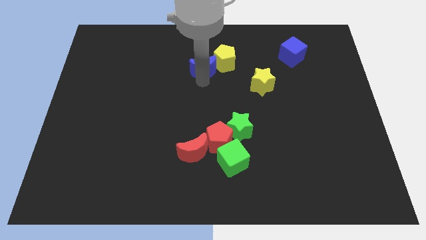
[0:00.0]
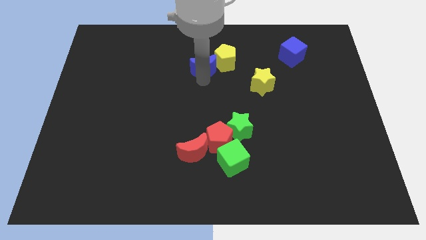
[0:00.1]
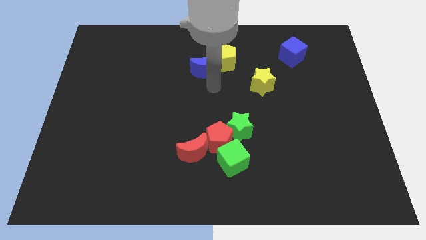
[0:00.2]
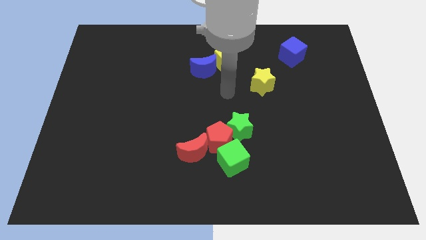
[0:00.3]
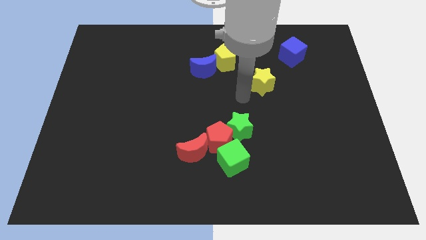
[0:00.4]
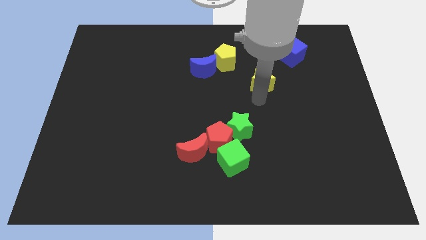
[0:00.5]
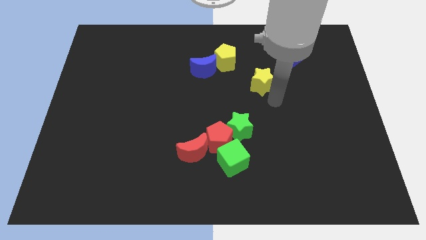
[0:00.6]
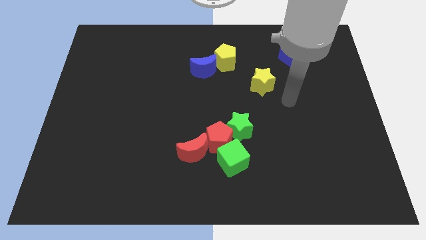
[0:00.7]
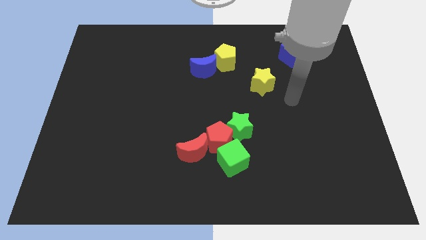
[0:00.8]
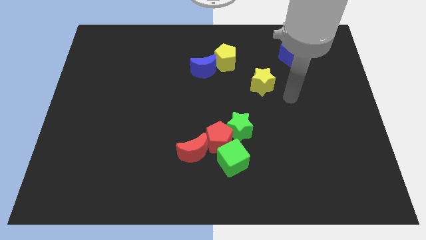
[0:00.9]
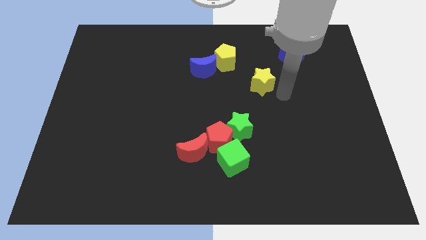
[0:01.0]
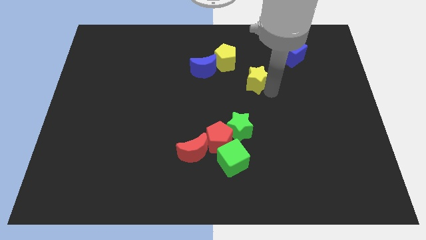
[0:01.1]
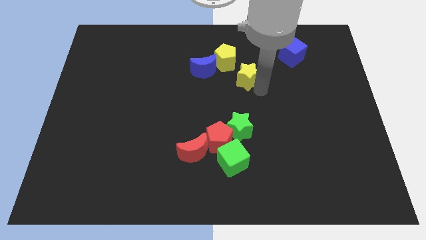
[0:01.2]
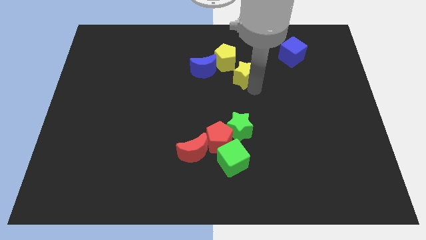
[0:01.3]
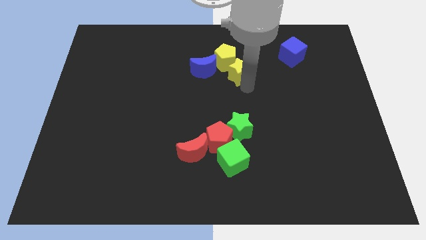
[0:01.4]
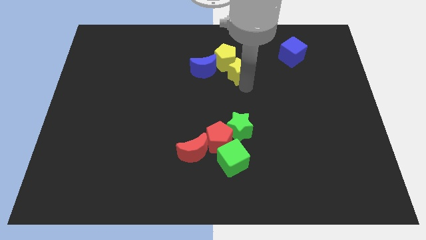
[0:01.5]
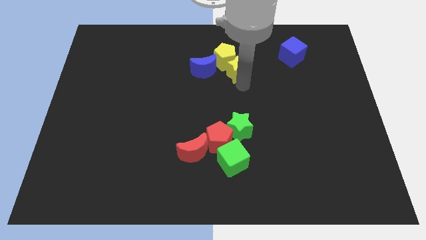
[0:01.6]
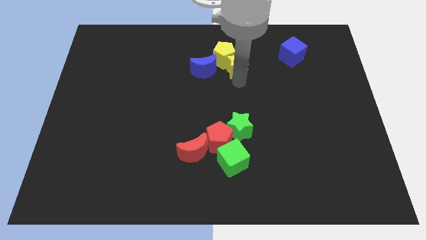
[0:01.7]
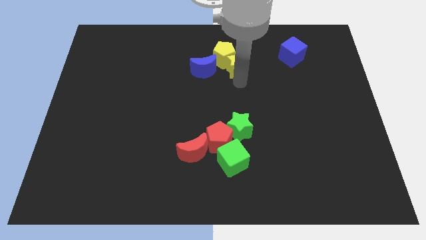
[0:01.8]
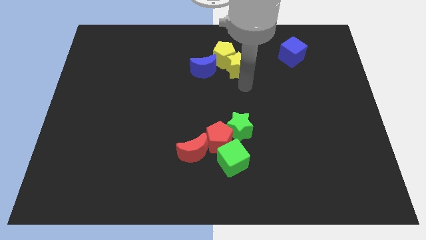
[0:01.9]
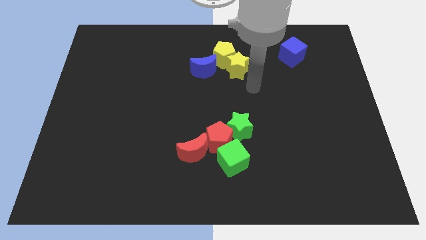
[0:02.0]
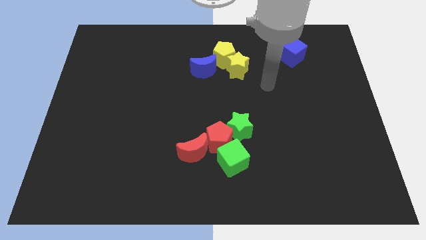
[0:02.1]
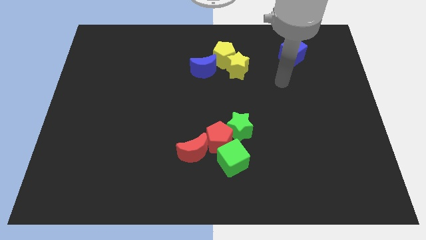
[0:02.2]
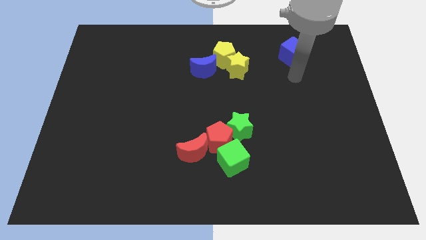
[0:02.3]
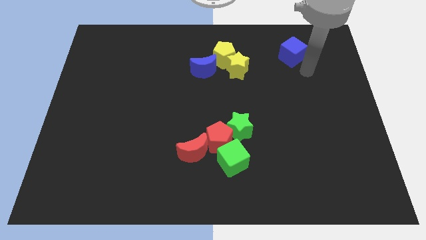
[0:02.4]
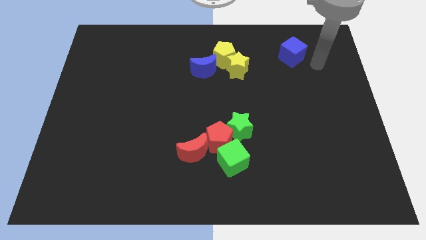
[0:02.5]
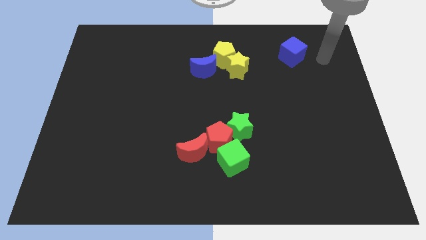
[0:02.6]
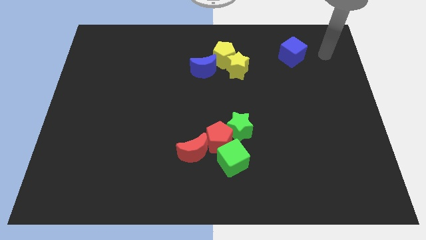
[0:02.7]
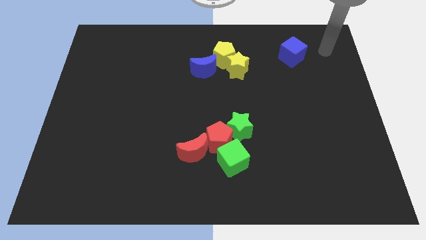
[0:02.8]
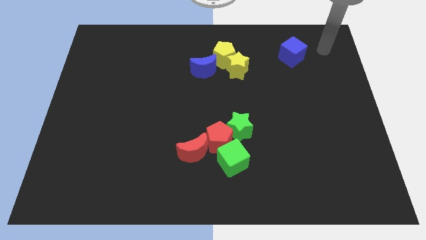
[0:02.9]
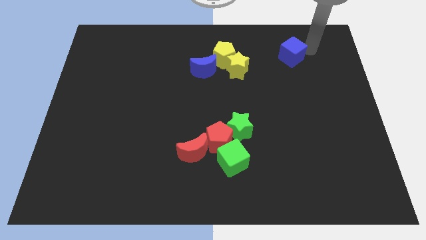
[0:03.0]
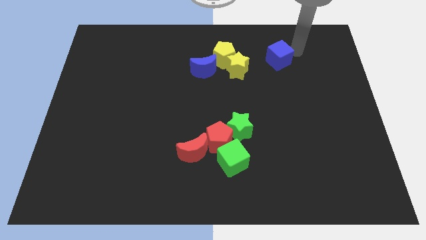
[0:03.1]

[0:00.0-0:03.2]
group up the yellow blocks at the right side of the blue moon

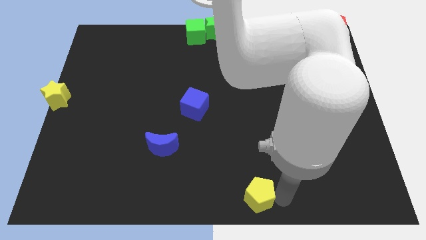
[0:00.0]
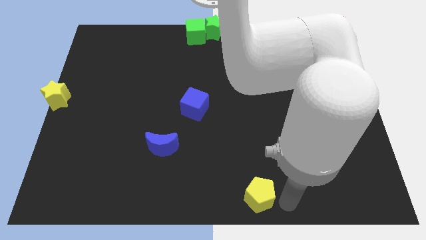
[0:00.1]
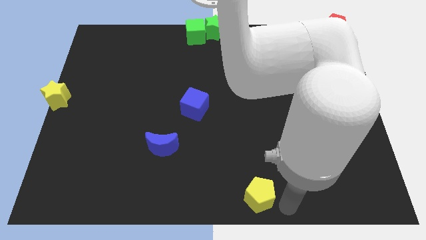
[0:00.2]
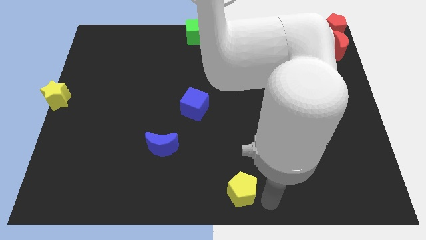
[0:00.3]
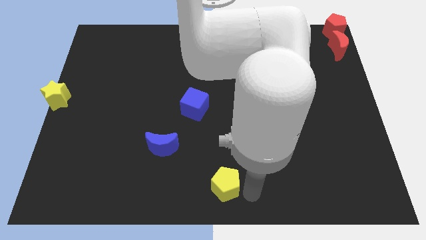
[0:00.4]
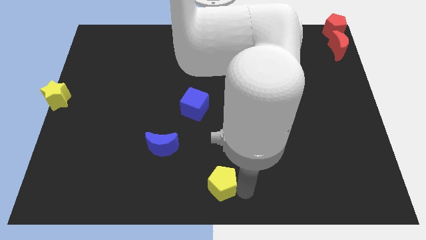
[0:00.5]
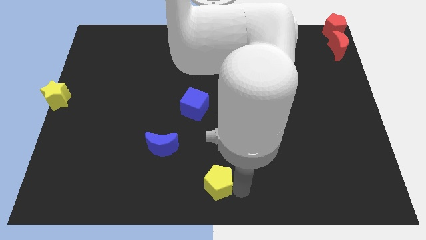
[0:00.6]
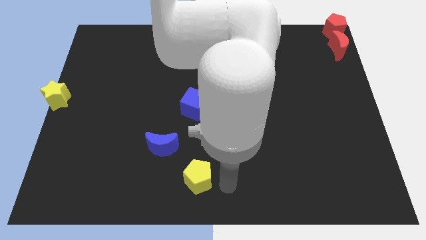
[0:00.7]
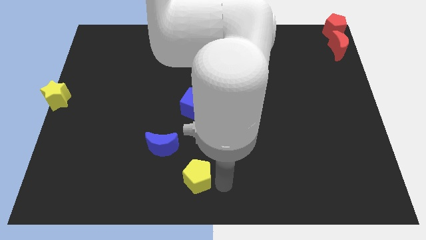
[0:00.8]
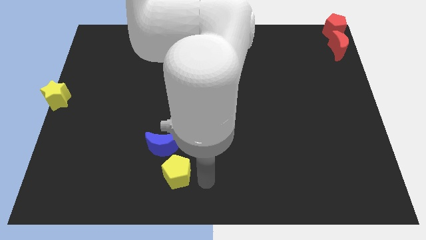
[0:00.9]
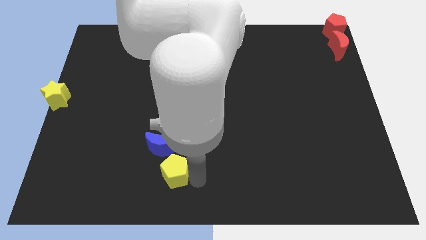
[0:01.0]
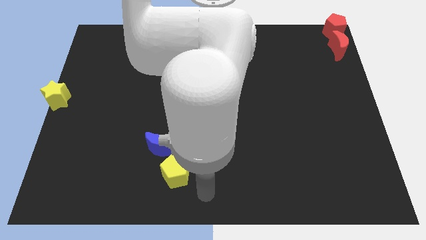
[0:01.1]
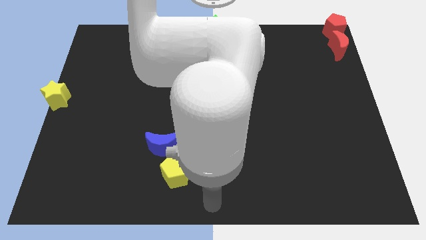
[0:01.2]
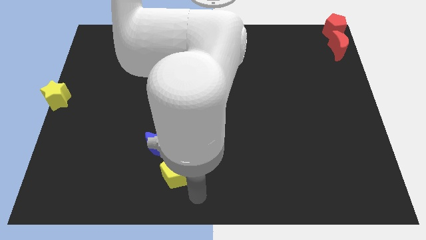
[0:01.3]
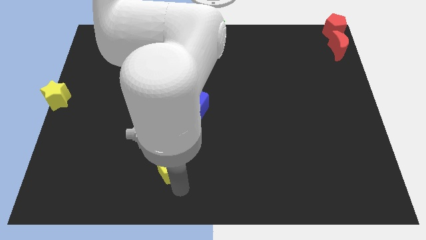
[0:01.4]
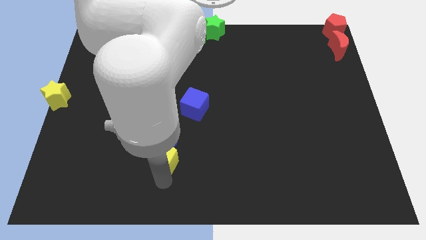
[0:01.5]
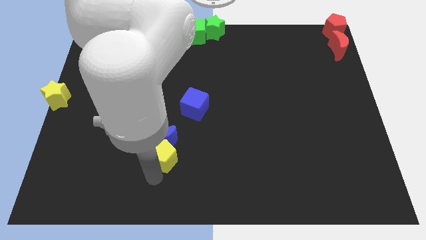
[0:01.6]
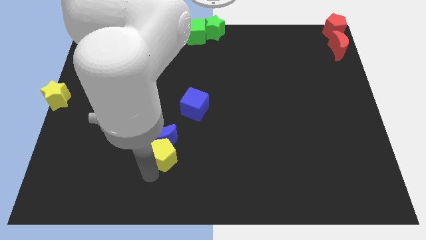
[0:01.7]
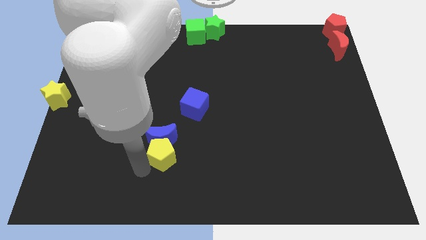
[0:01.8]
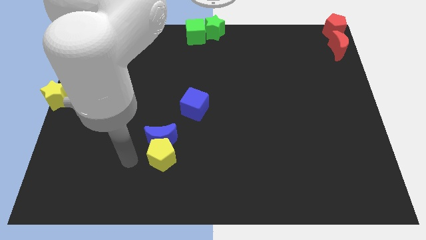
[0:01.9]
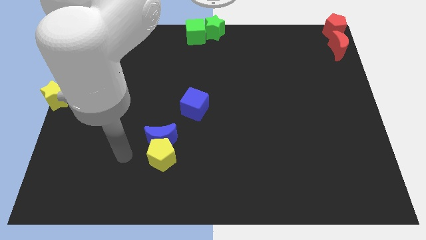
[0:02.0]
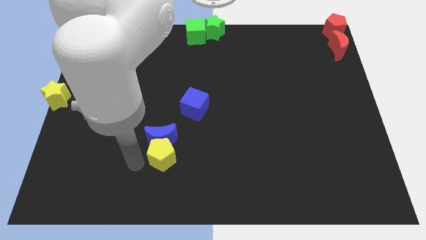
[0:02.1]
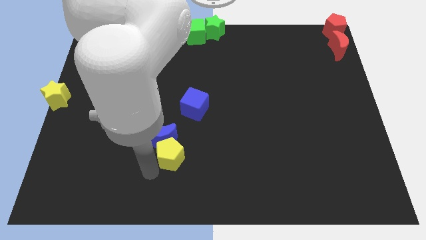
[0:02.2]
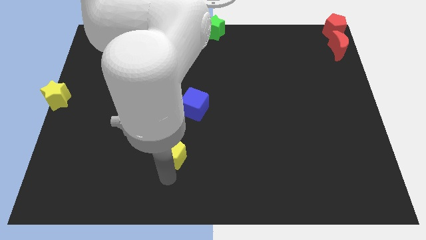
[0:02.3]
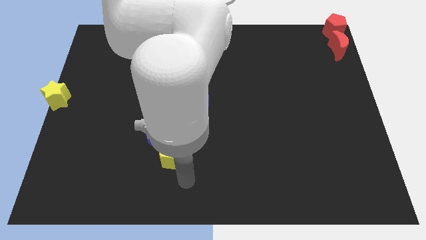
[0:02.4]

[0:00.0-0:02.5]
push the yellow pentagon into the blue moon

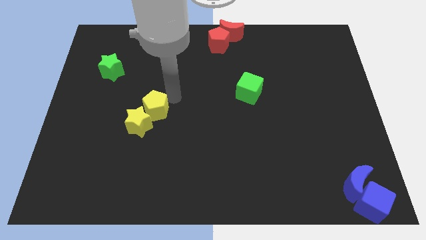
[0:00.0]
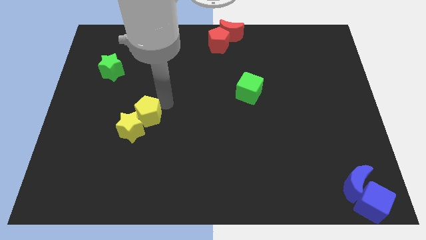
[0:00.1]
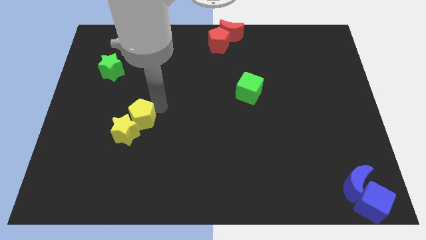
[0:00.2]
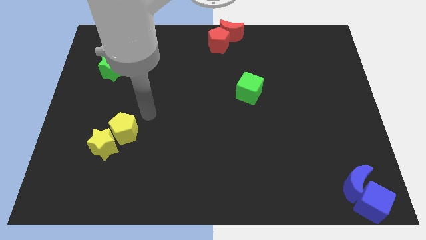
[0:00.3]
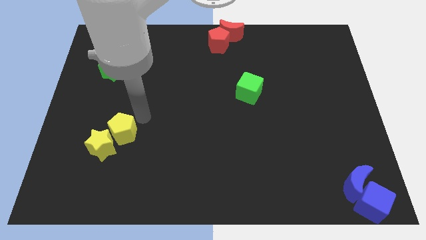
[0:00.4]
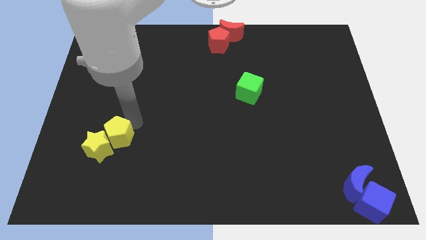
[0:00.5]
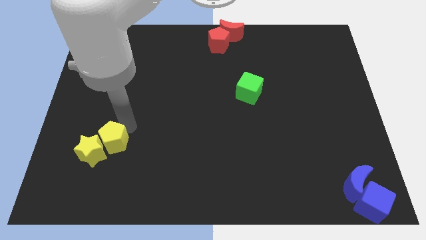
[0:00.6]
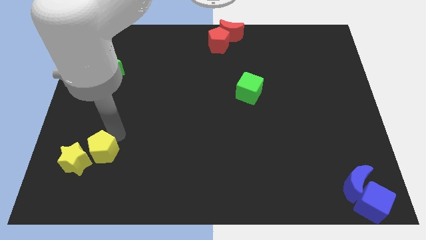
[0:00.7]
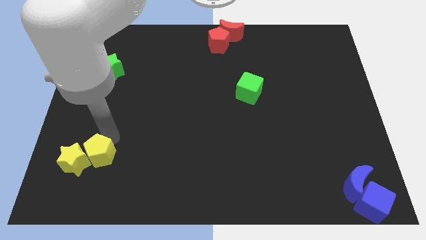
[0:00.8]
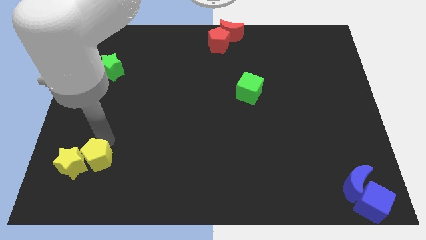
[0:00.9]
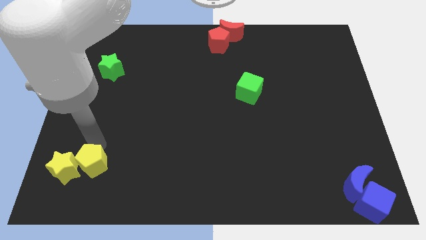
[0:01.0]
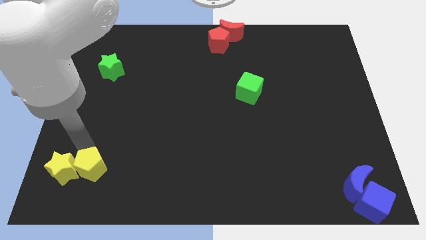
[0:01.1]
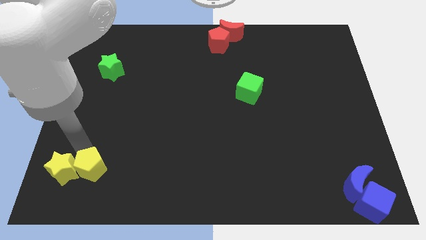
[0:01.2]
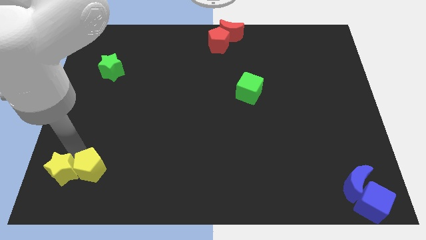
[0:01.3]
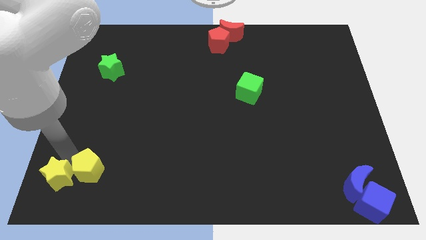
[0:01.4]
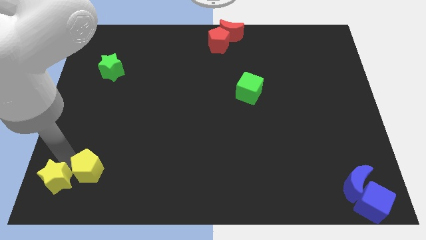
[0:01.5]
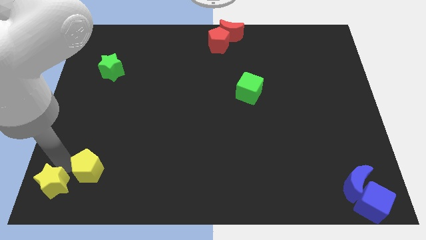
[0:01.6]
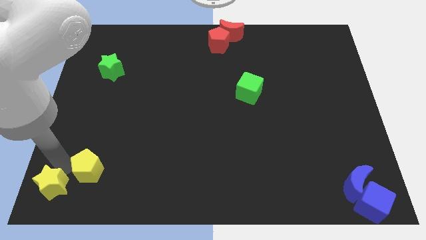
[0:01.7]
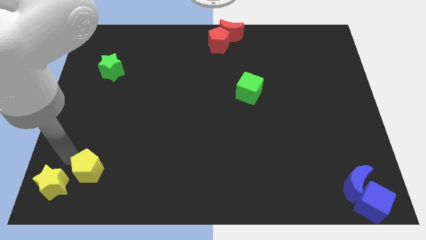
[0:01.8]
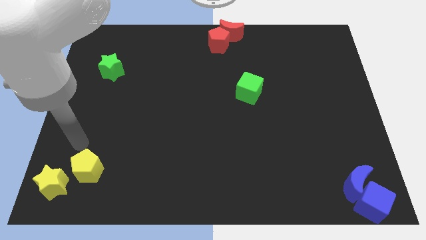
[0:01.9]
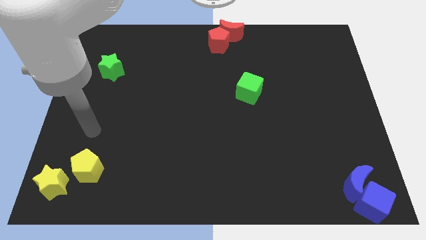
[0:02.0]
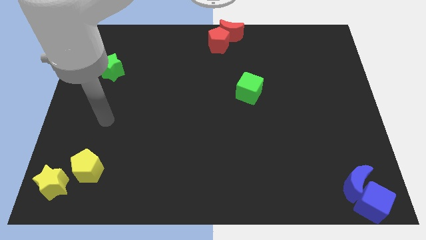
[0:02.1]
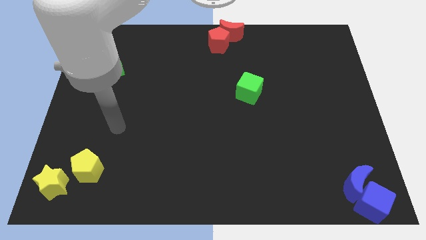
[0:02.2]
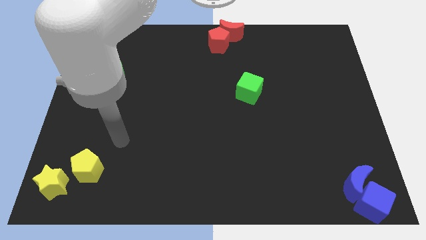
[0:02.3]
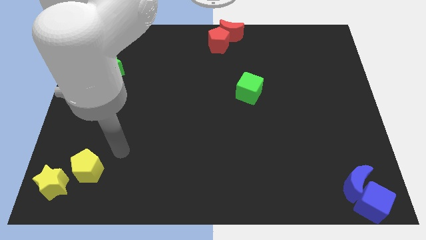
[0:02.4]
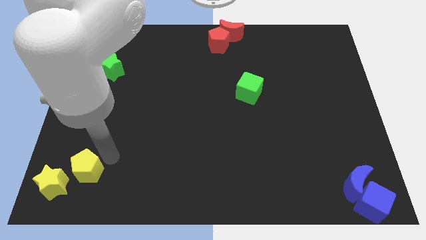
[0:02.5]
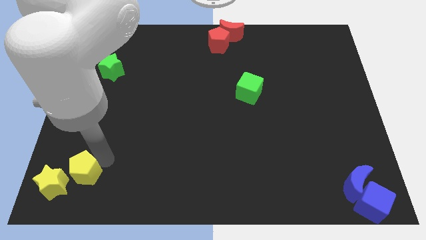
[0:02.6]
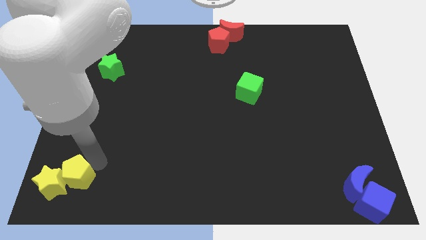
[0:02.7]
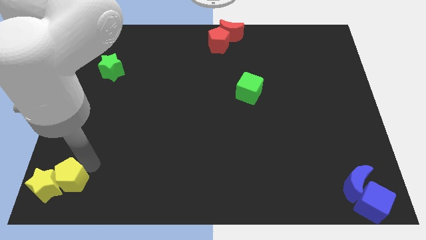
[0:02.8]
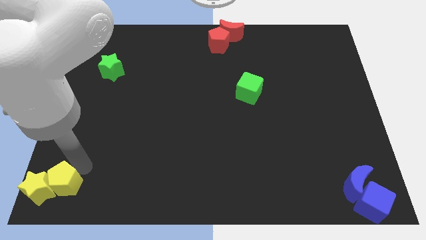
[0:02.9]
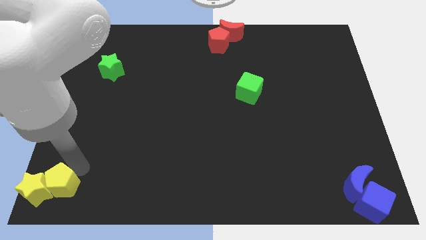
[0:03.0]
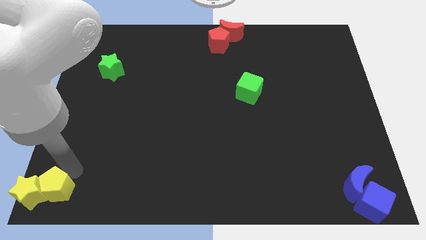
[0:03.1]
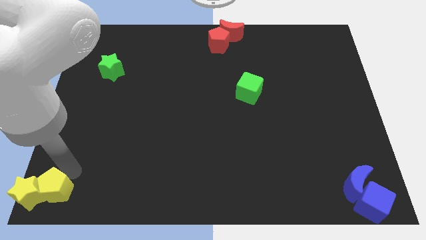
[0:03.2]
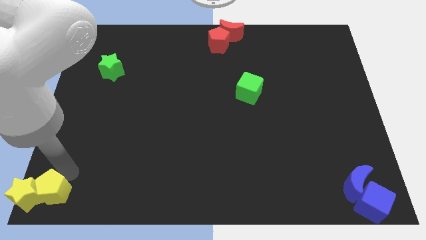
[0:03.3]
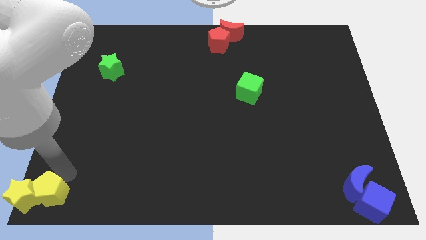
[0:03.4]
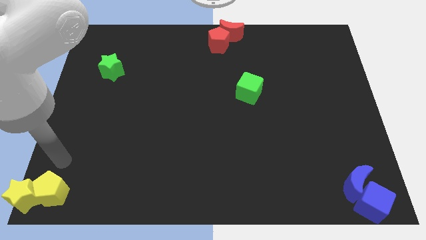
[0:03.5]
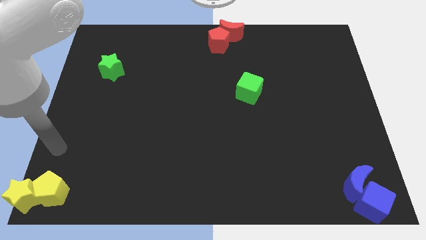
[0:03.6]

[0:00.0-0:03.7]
place the yellow pentagon and yellow star at the bottom left corner of the board
